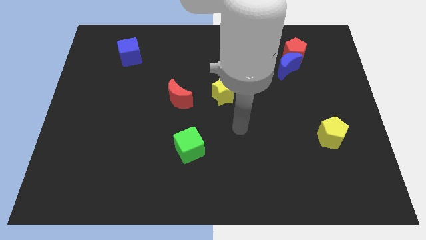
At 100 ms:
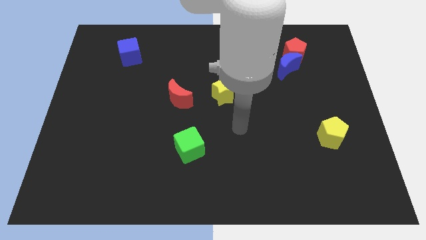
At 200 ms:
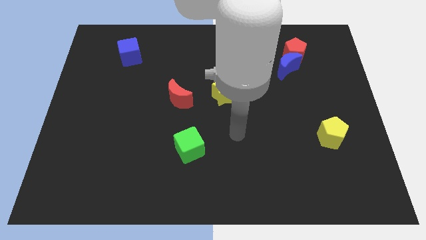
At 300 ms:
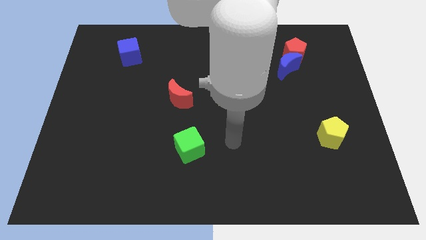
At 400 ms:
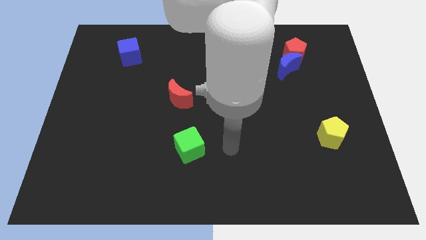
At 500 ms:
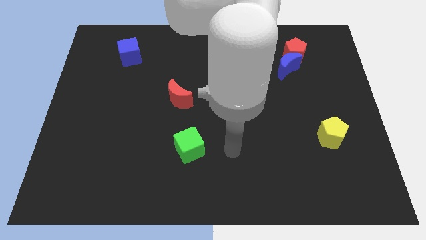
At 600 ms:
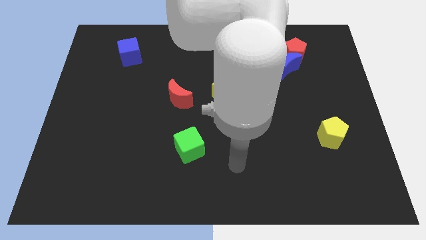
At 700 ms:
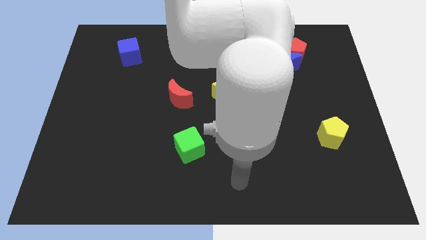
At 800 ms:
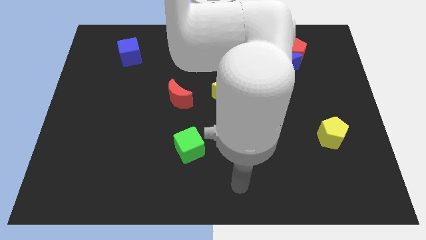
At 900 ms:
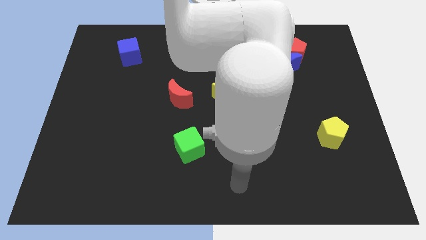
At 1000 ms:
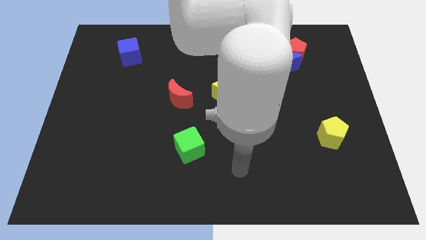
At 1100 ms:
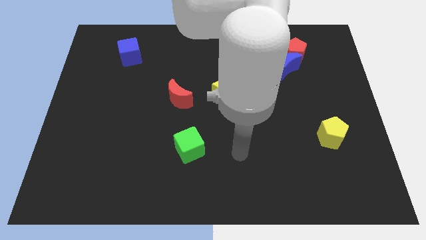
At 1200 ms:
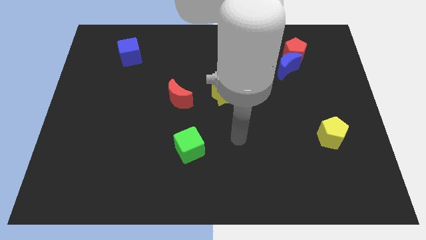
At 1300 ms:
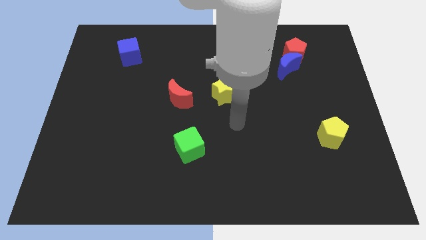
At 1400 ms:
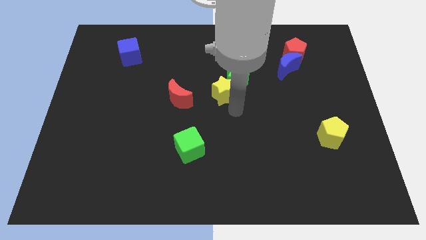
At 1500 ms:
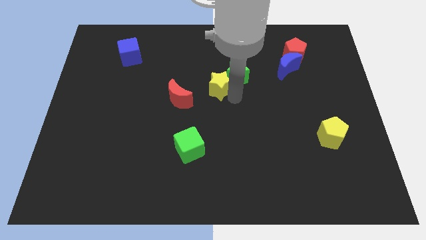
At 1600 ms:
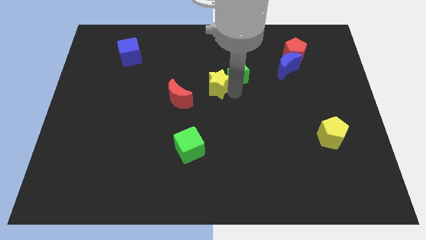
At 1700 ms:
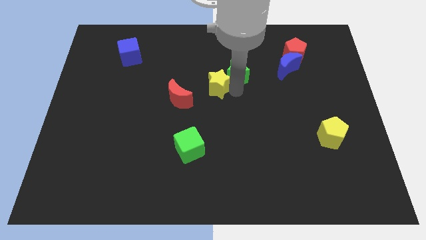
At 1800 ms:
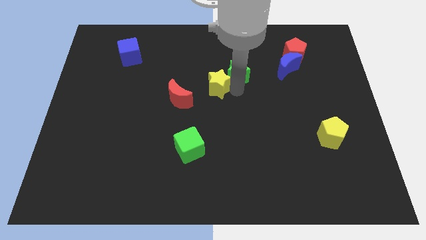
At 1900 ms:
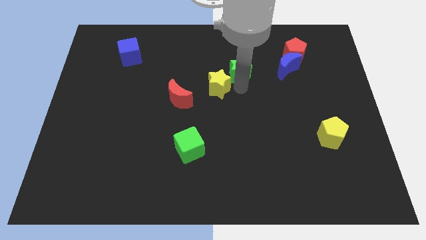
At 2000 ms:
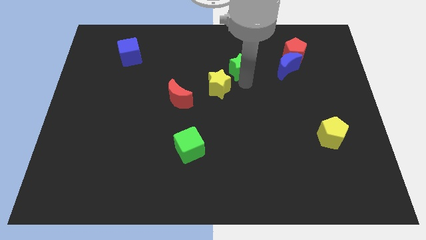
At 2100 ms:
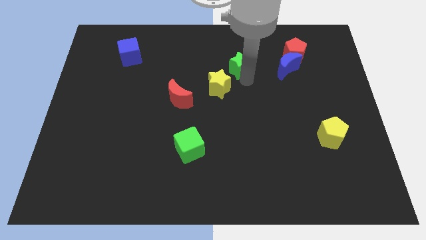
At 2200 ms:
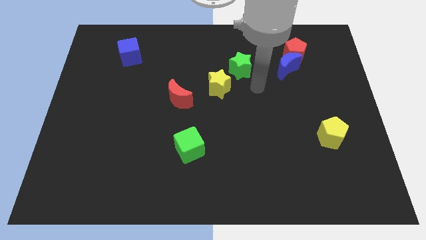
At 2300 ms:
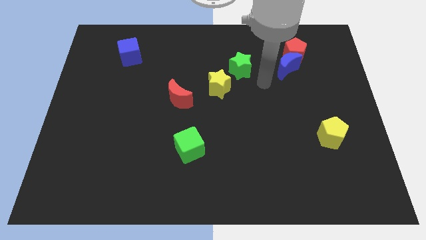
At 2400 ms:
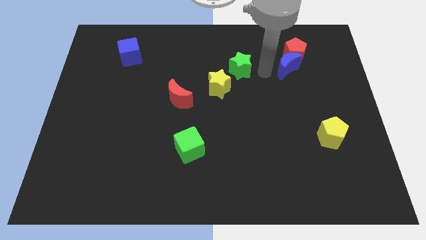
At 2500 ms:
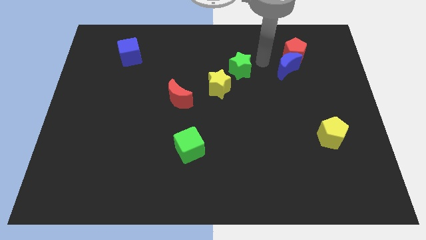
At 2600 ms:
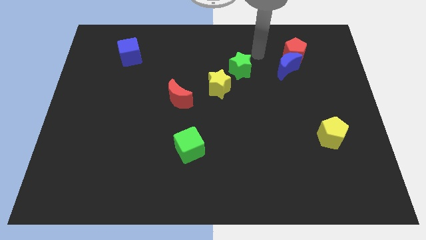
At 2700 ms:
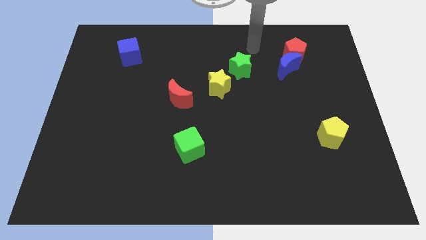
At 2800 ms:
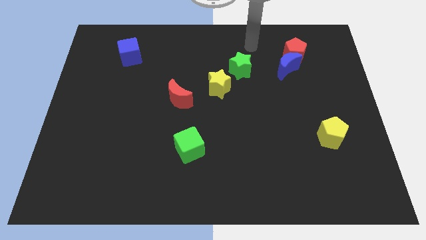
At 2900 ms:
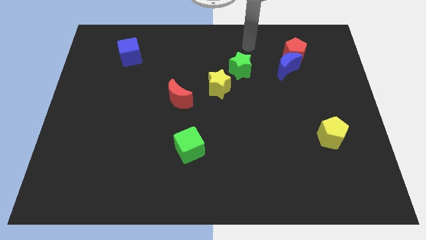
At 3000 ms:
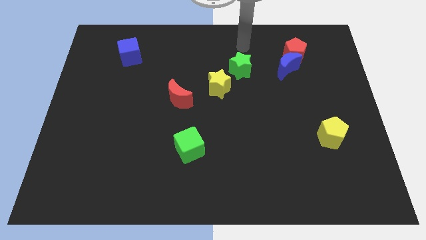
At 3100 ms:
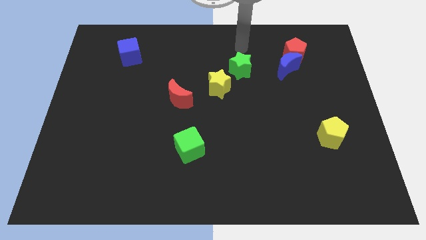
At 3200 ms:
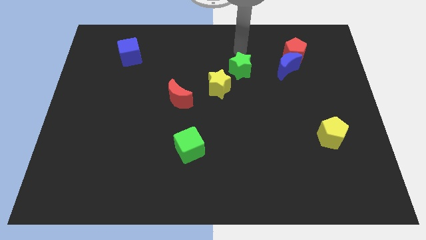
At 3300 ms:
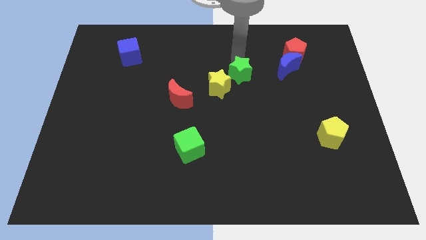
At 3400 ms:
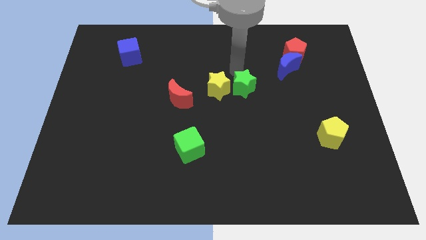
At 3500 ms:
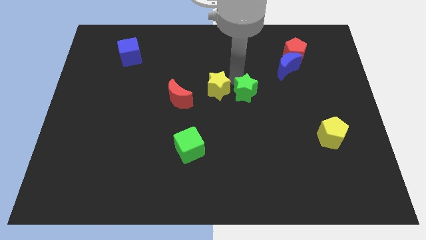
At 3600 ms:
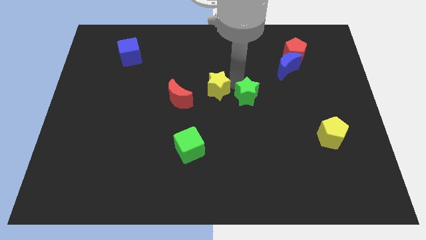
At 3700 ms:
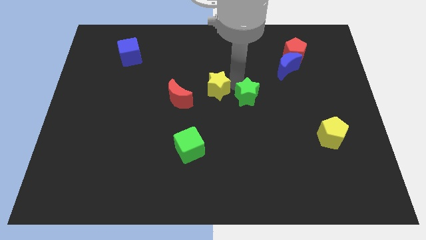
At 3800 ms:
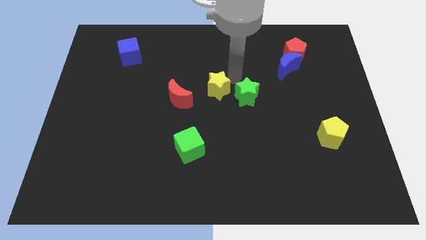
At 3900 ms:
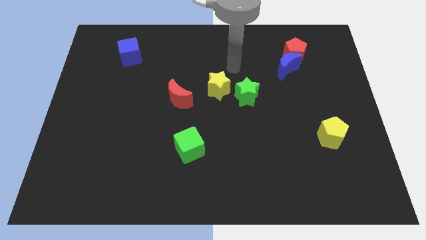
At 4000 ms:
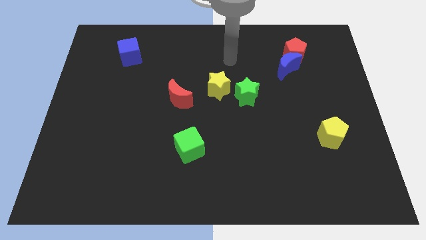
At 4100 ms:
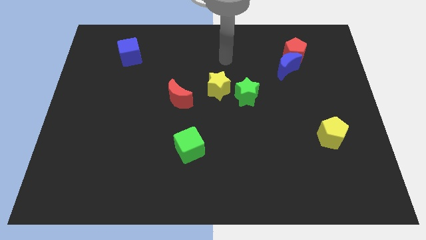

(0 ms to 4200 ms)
move the green star to the right of the yellow star

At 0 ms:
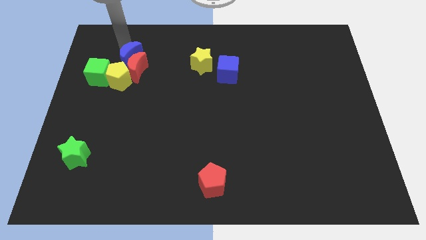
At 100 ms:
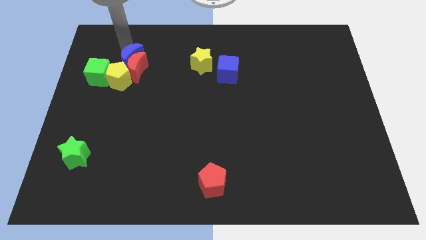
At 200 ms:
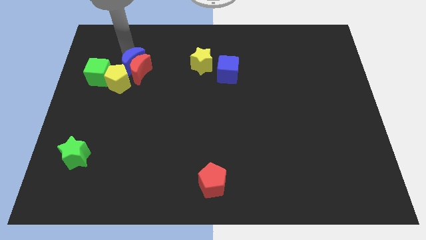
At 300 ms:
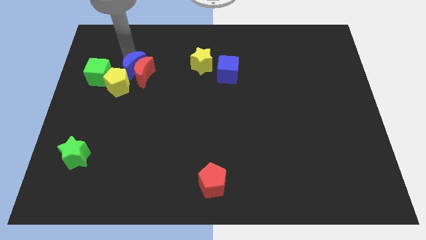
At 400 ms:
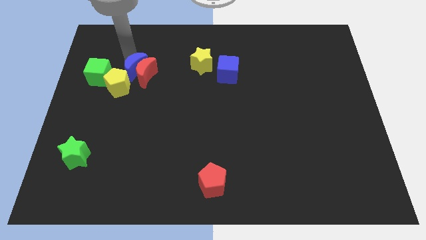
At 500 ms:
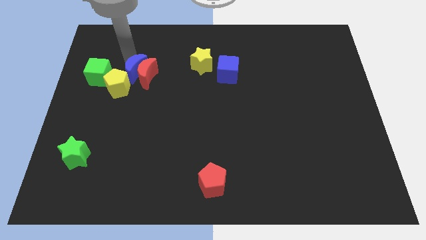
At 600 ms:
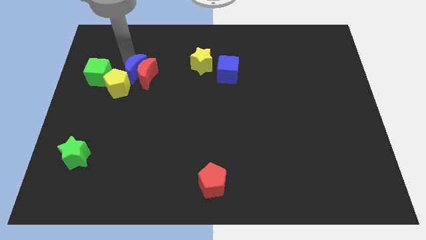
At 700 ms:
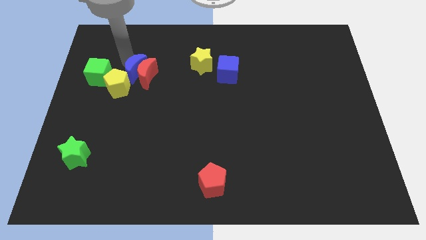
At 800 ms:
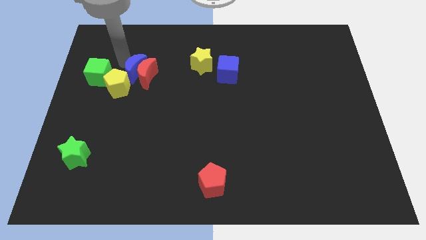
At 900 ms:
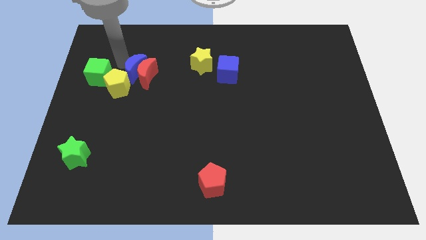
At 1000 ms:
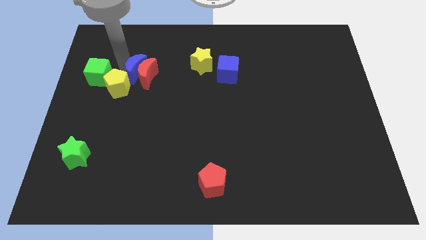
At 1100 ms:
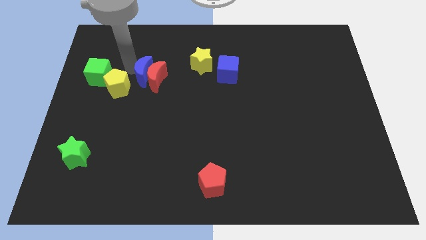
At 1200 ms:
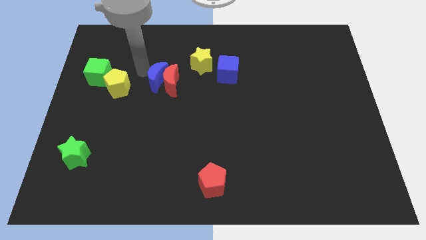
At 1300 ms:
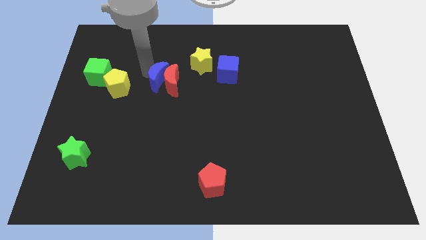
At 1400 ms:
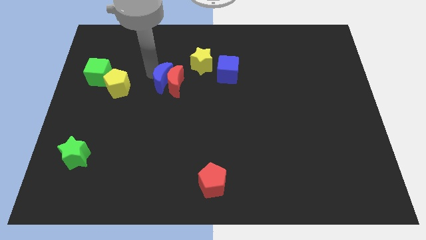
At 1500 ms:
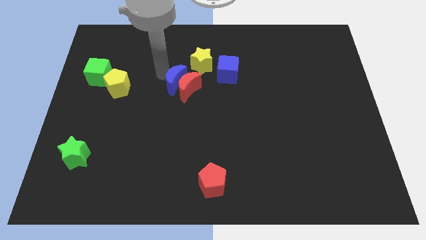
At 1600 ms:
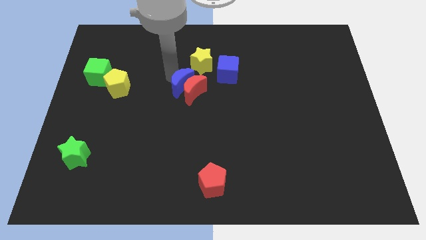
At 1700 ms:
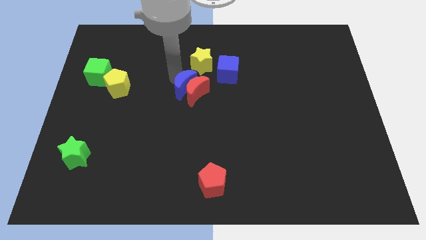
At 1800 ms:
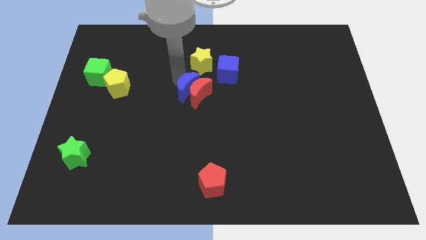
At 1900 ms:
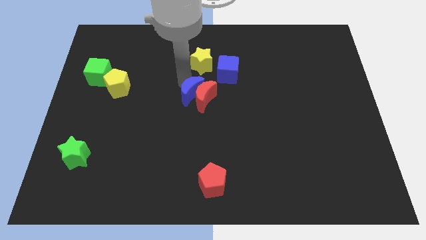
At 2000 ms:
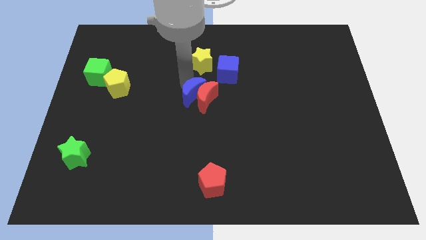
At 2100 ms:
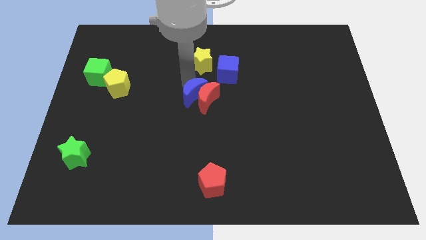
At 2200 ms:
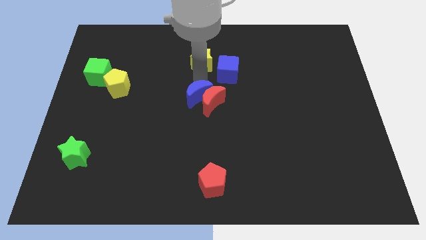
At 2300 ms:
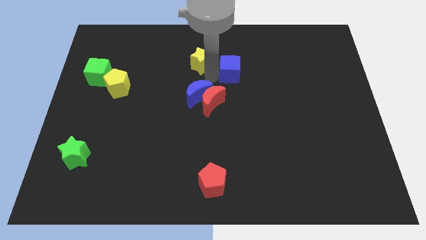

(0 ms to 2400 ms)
push the red moon and the blue crescent towards the center of the board

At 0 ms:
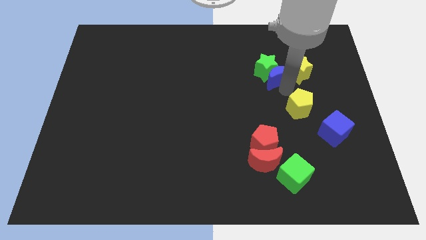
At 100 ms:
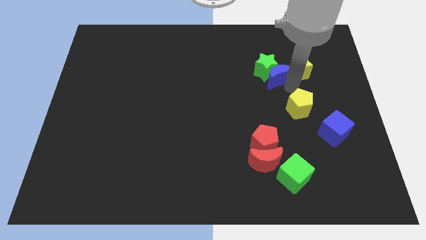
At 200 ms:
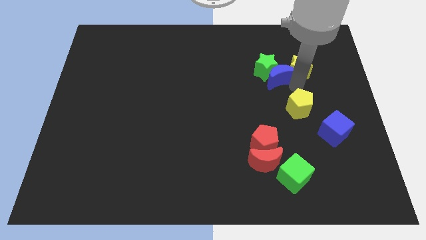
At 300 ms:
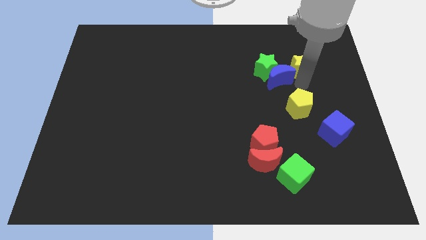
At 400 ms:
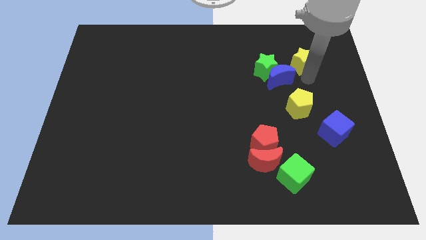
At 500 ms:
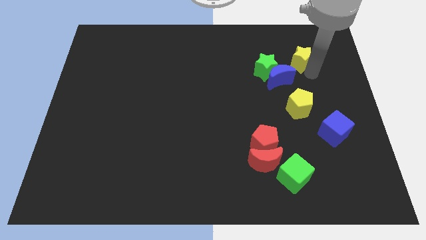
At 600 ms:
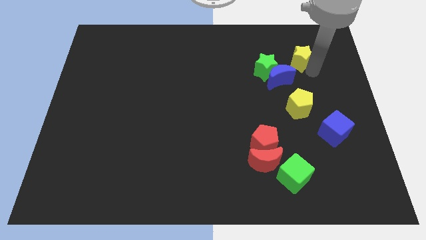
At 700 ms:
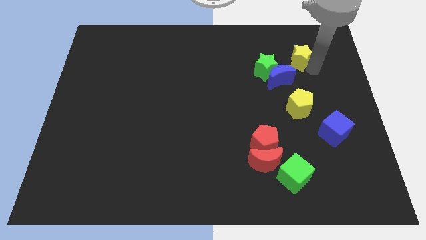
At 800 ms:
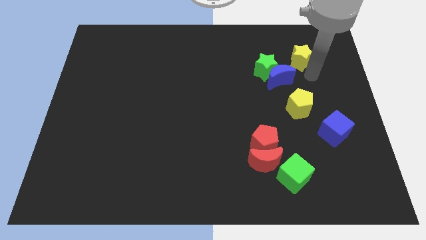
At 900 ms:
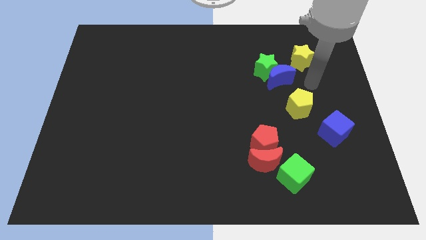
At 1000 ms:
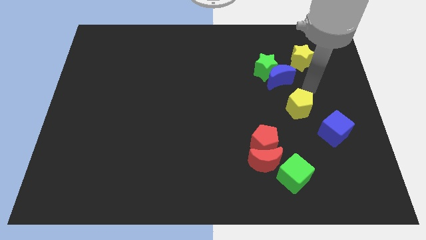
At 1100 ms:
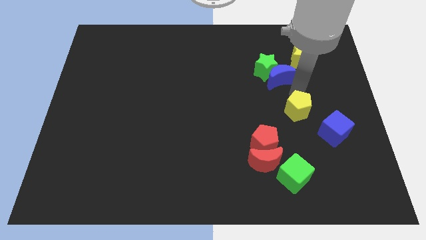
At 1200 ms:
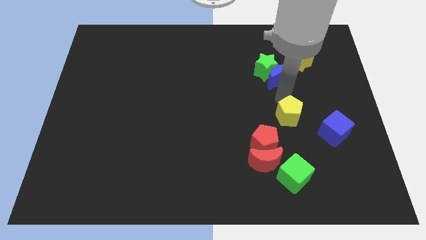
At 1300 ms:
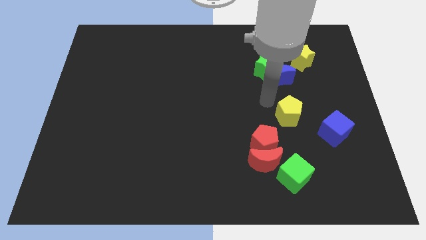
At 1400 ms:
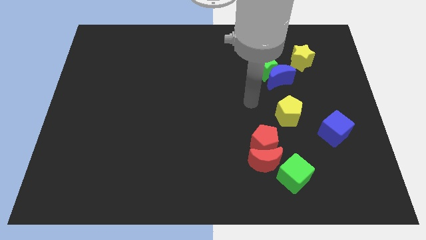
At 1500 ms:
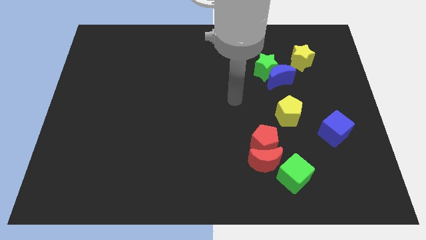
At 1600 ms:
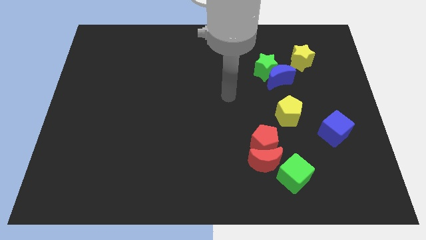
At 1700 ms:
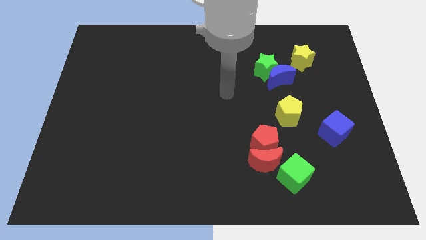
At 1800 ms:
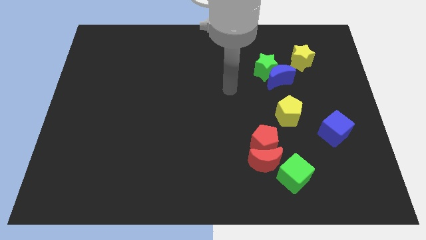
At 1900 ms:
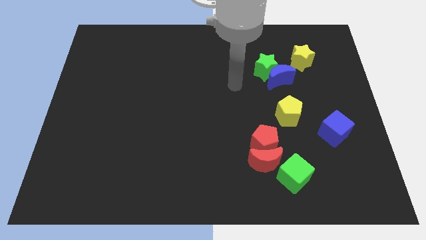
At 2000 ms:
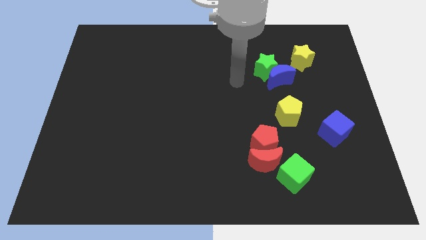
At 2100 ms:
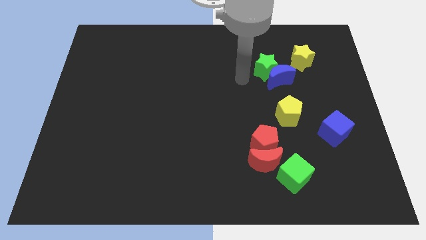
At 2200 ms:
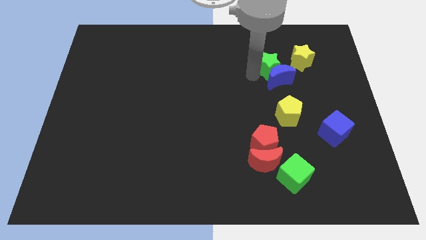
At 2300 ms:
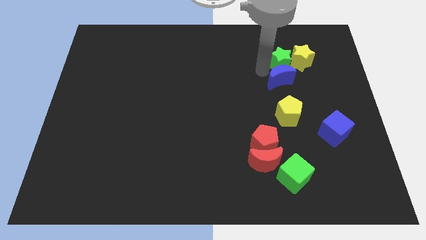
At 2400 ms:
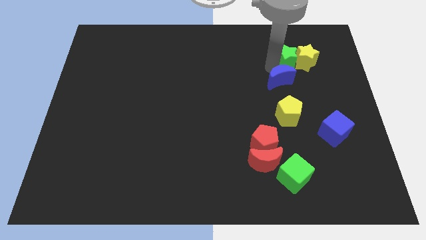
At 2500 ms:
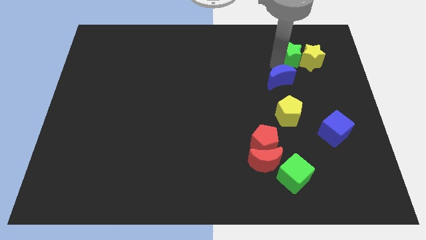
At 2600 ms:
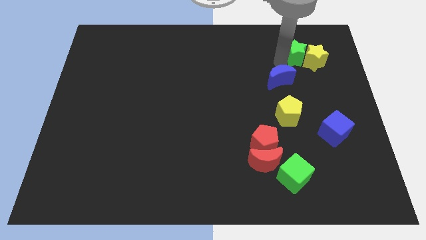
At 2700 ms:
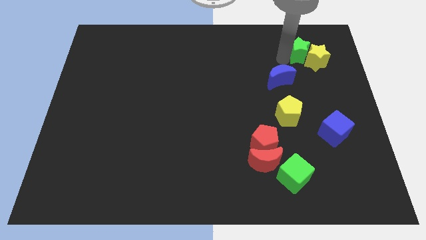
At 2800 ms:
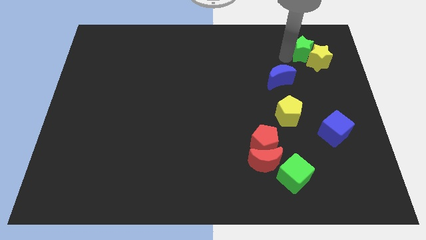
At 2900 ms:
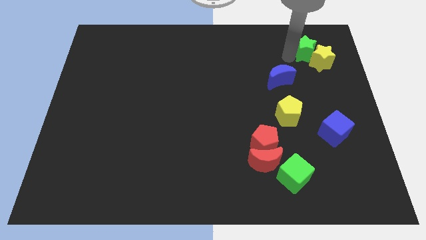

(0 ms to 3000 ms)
separate the blue moon and green star
